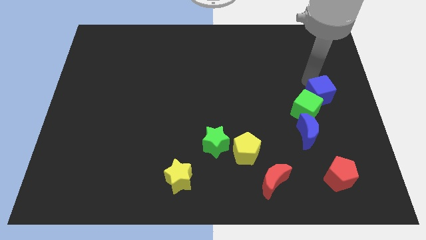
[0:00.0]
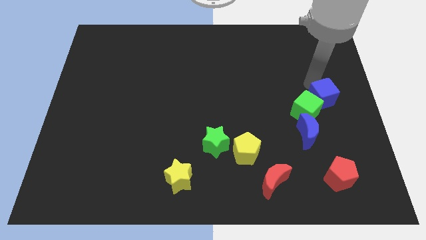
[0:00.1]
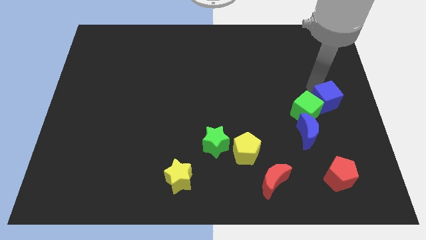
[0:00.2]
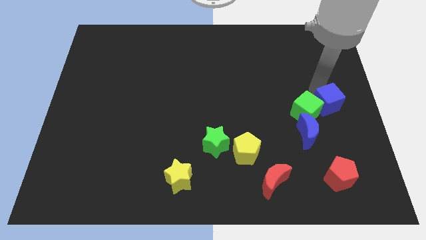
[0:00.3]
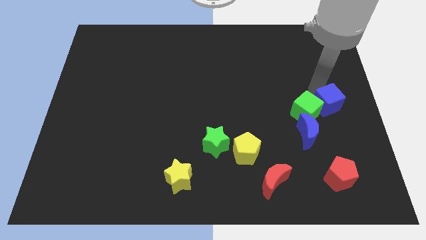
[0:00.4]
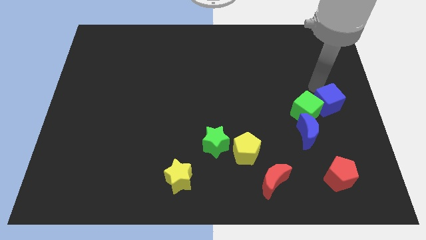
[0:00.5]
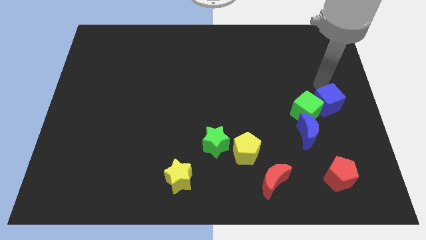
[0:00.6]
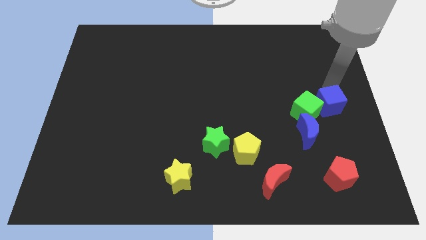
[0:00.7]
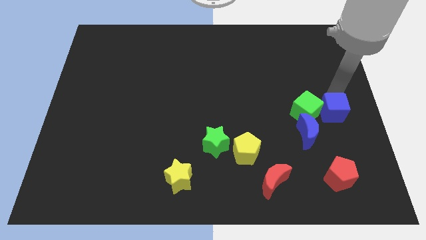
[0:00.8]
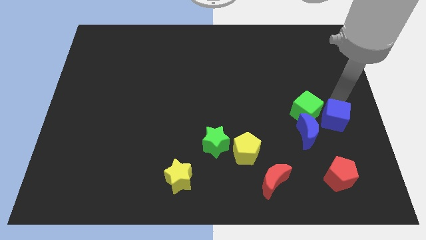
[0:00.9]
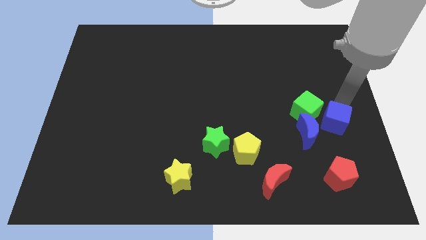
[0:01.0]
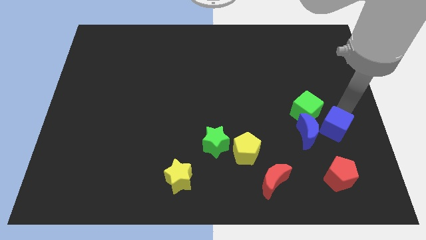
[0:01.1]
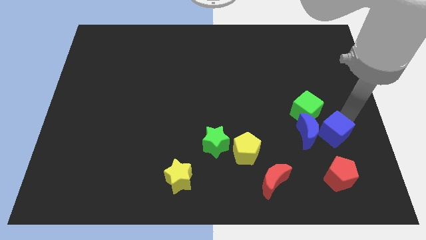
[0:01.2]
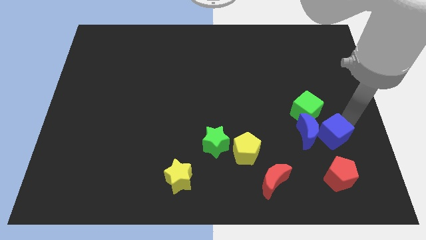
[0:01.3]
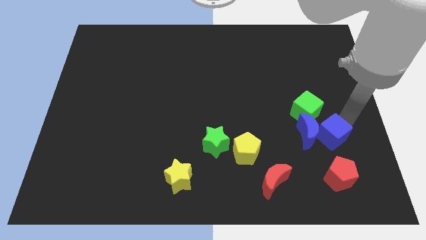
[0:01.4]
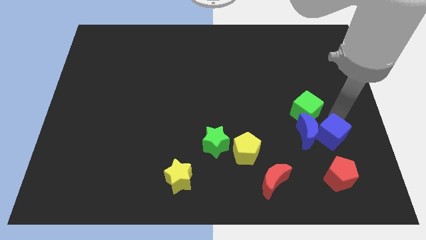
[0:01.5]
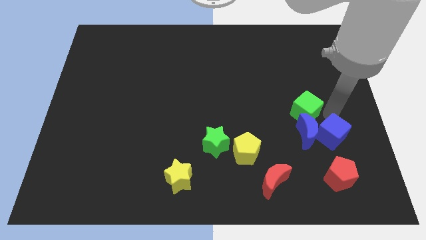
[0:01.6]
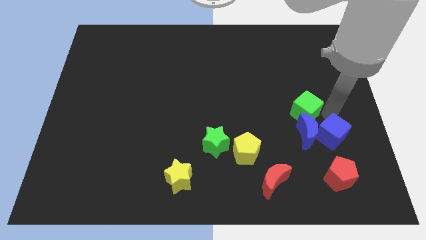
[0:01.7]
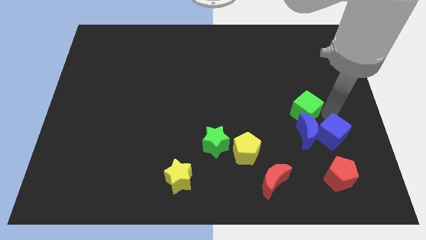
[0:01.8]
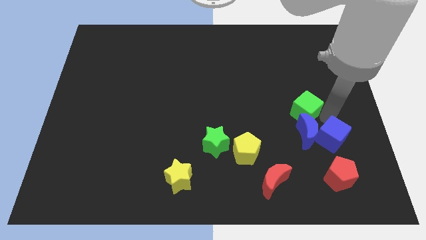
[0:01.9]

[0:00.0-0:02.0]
place the blue cube to the right of the blue crescent

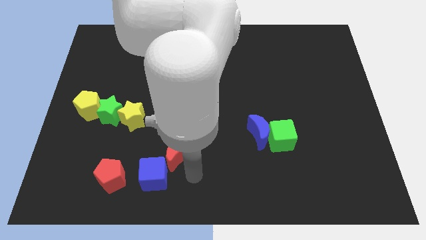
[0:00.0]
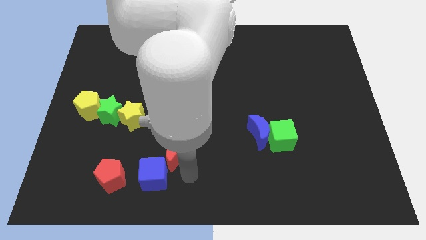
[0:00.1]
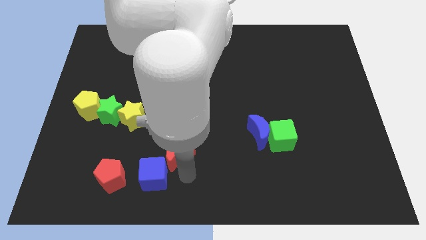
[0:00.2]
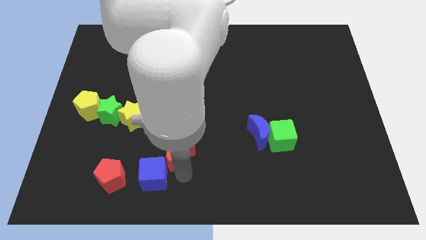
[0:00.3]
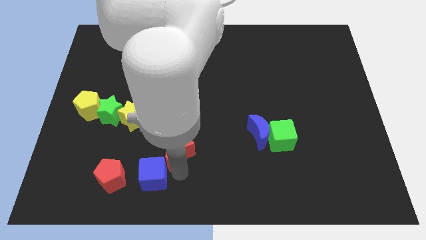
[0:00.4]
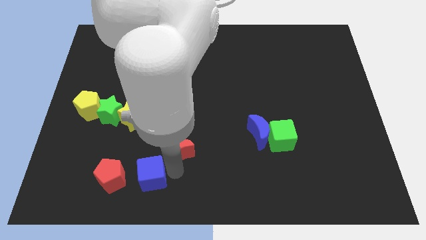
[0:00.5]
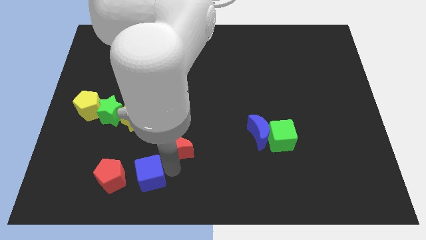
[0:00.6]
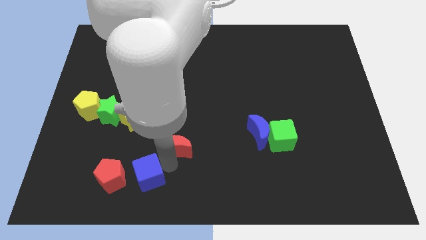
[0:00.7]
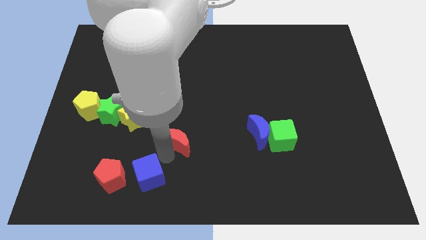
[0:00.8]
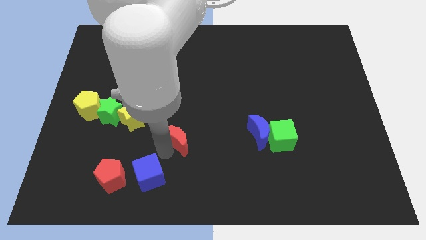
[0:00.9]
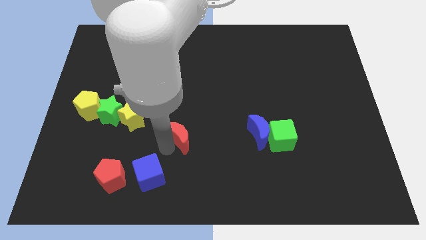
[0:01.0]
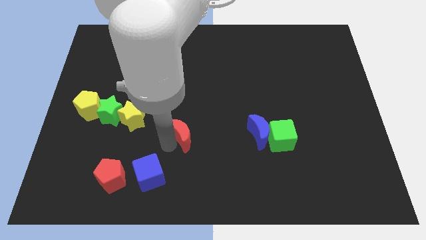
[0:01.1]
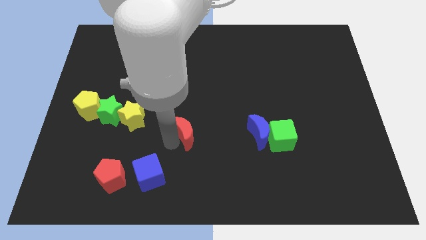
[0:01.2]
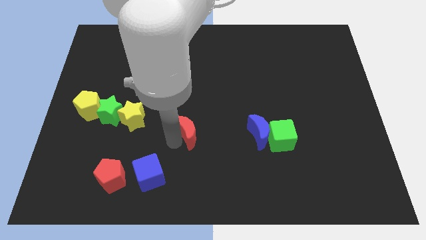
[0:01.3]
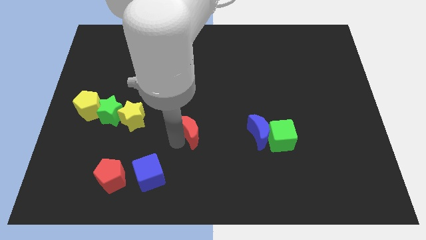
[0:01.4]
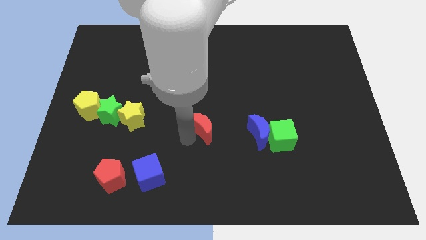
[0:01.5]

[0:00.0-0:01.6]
separate the red moon from the blue cube

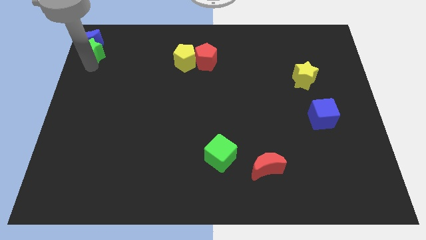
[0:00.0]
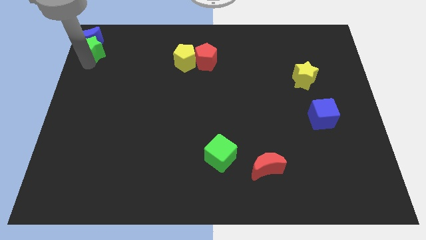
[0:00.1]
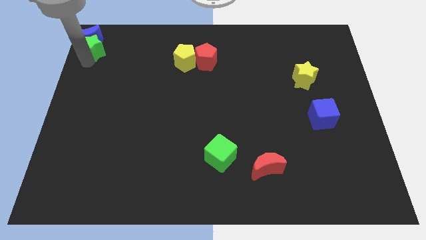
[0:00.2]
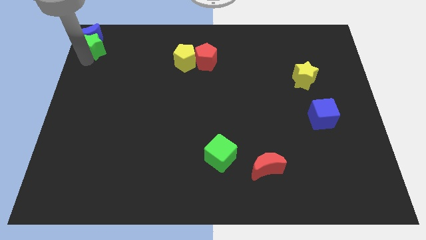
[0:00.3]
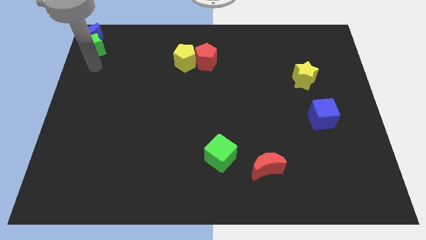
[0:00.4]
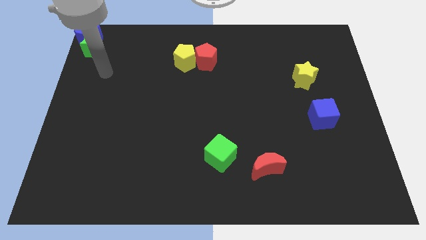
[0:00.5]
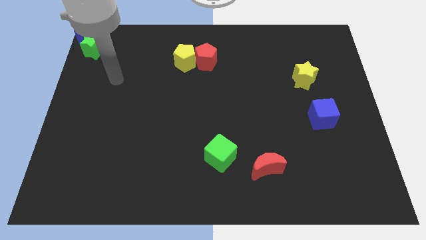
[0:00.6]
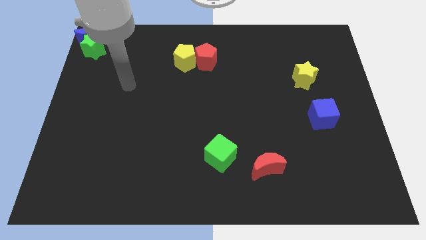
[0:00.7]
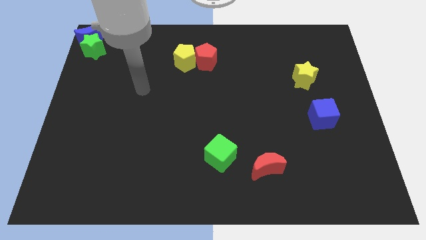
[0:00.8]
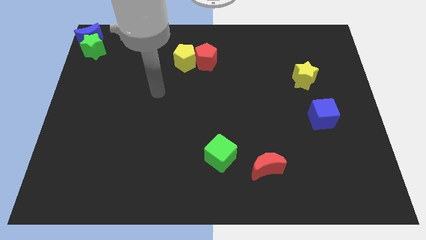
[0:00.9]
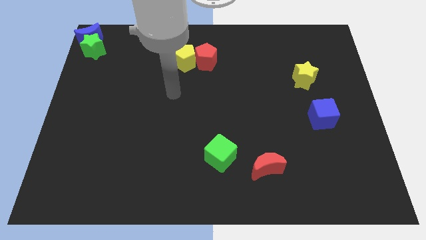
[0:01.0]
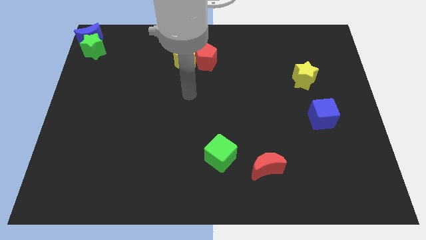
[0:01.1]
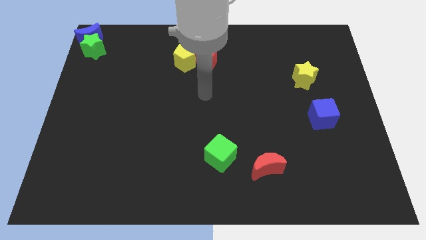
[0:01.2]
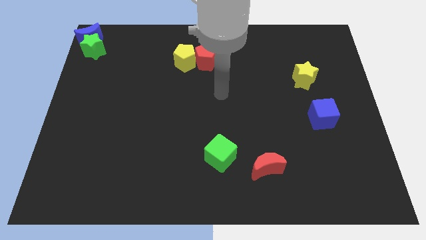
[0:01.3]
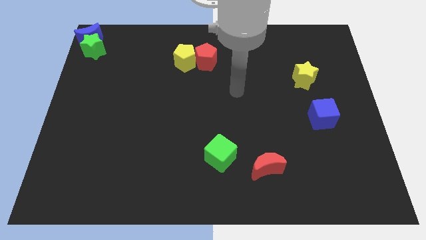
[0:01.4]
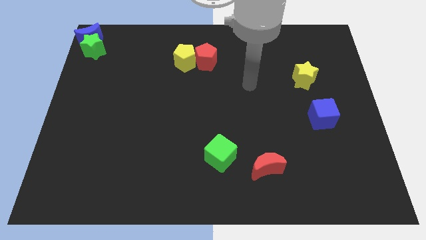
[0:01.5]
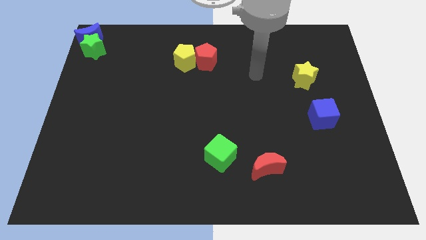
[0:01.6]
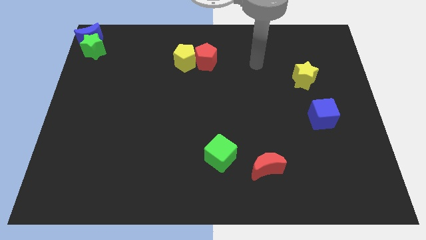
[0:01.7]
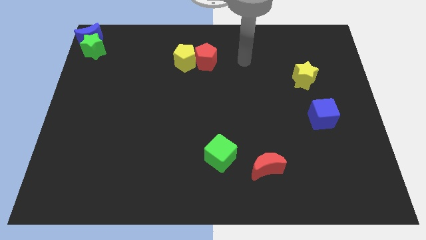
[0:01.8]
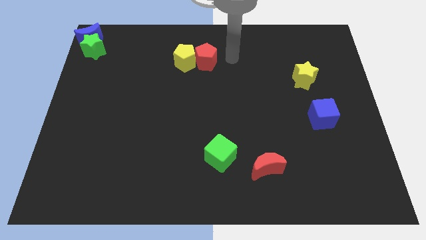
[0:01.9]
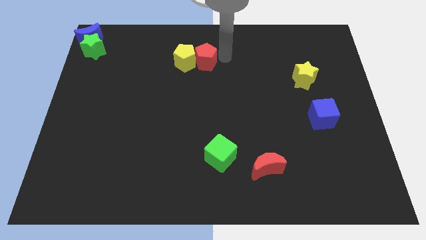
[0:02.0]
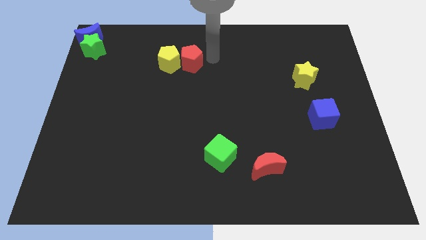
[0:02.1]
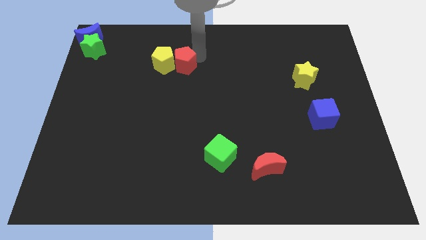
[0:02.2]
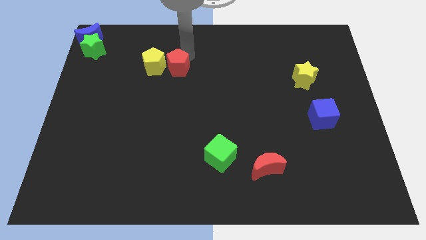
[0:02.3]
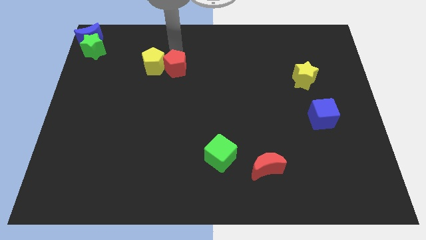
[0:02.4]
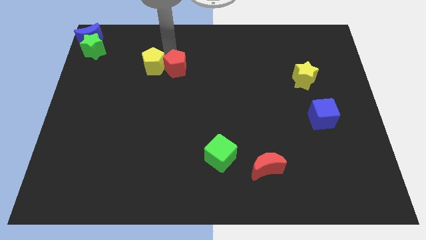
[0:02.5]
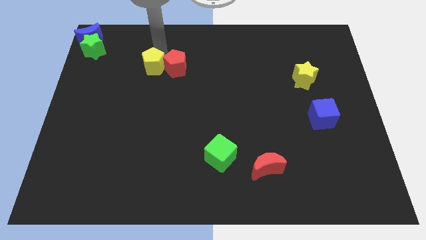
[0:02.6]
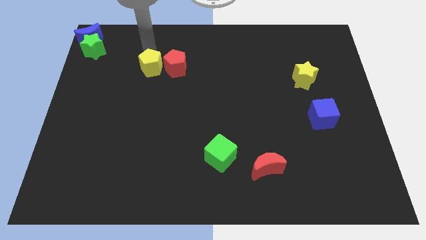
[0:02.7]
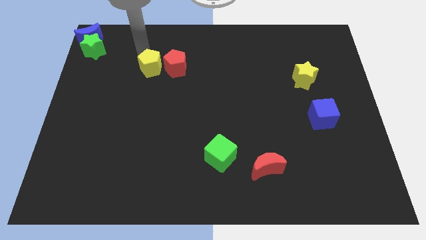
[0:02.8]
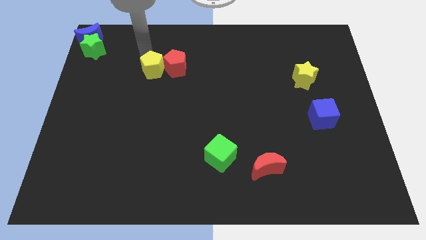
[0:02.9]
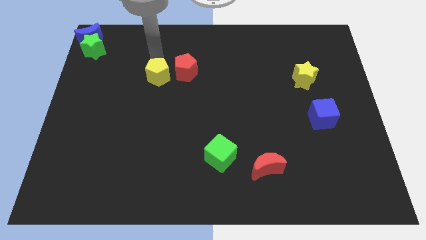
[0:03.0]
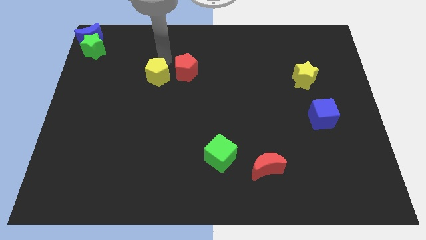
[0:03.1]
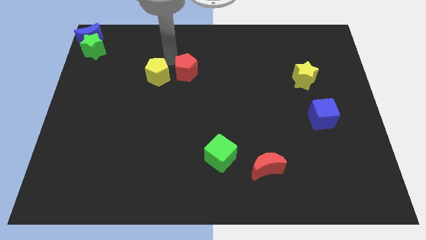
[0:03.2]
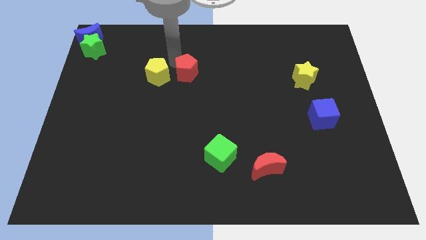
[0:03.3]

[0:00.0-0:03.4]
push the yellow pentagon and red pentagon to the left side

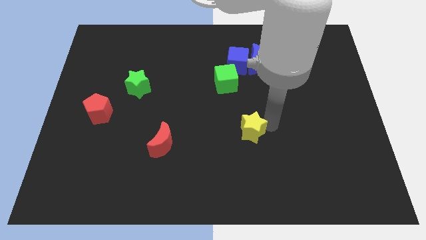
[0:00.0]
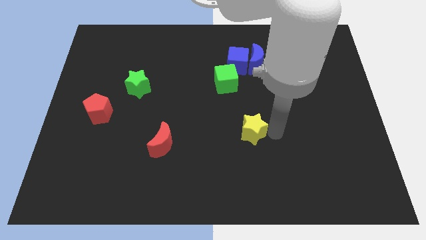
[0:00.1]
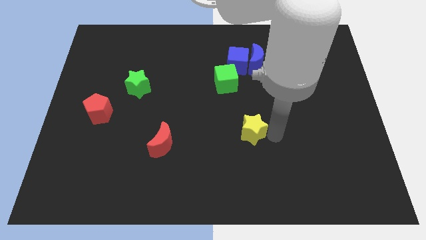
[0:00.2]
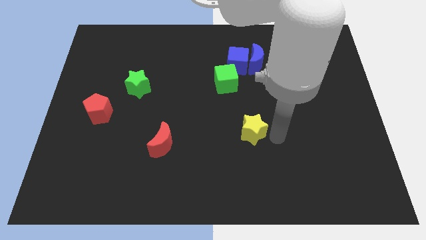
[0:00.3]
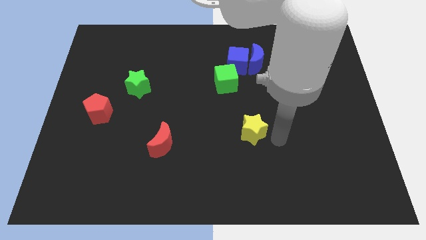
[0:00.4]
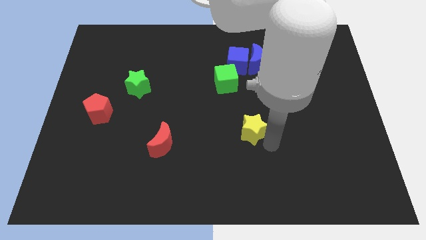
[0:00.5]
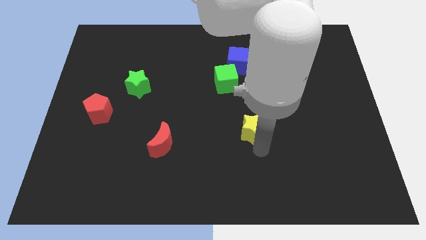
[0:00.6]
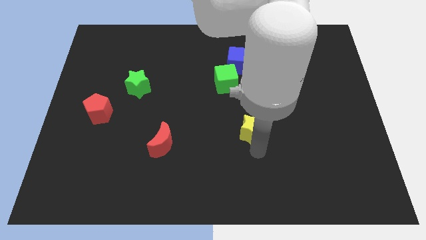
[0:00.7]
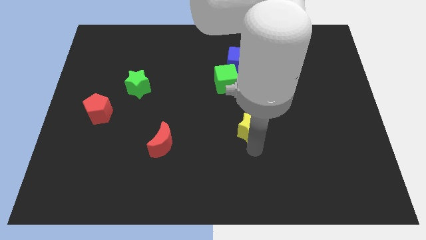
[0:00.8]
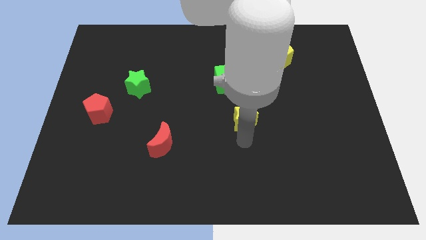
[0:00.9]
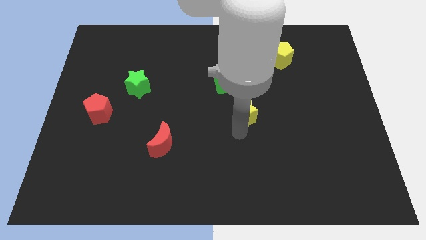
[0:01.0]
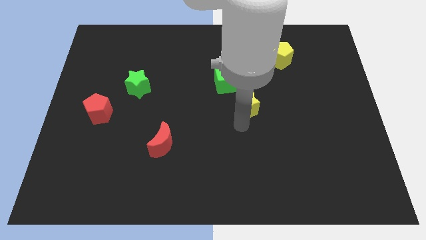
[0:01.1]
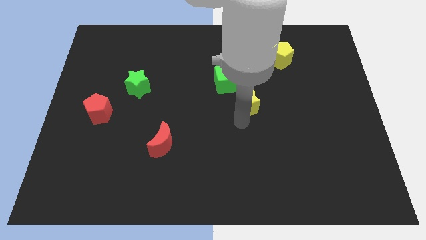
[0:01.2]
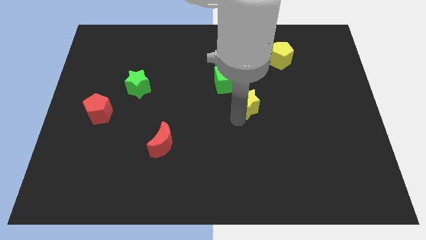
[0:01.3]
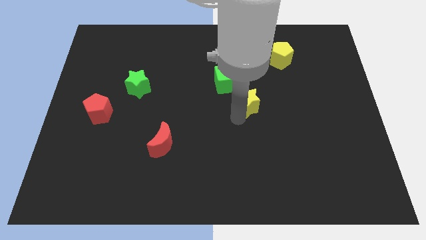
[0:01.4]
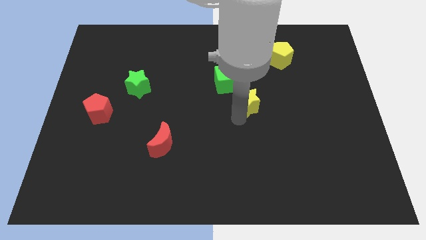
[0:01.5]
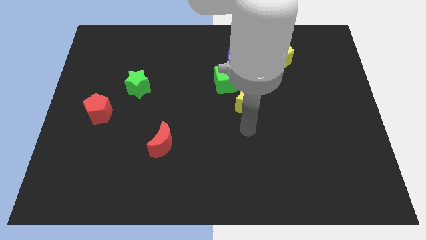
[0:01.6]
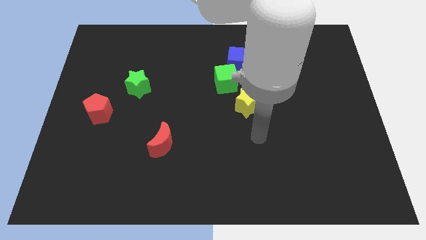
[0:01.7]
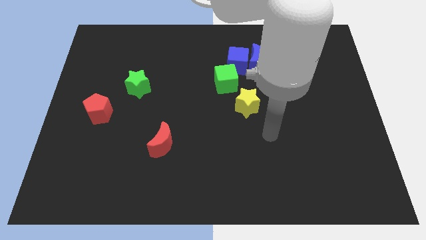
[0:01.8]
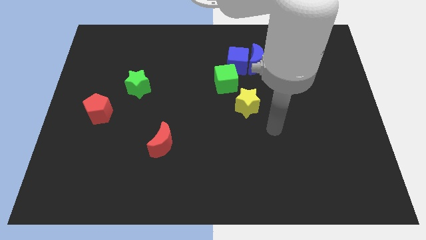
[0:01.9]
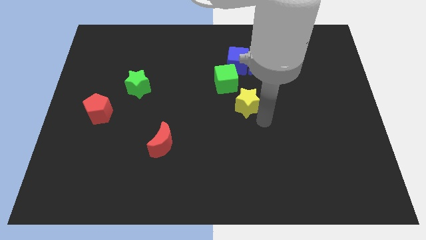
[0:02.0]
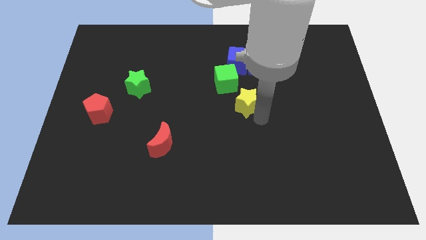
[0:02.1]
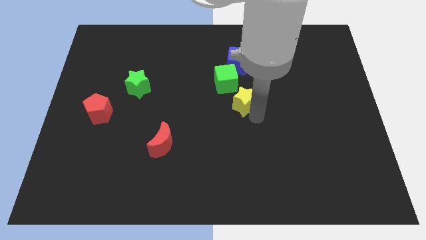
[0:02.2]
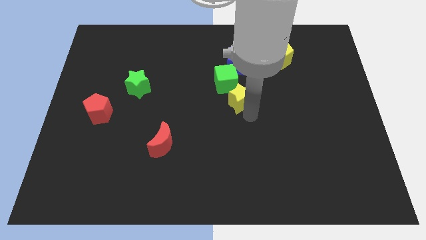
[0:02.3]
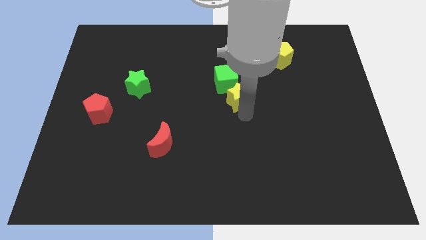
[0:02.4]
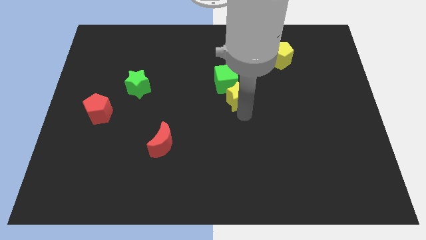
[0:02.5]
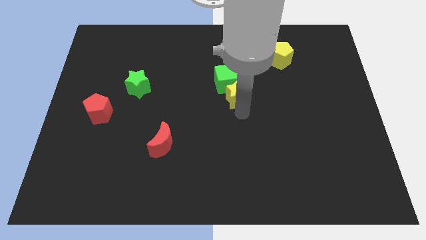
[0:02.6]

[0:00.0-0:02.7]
push the yellow star into the green cube
